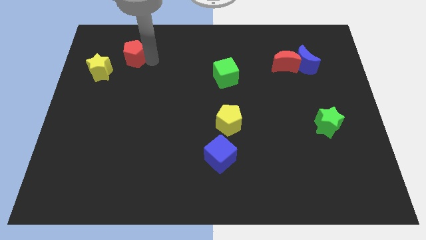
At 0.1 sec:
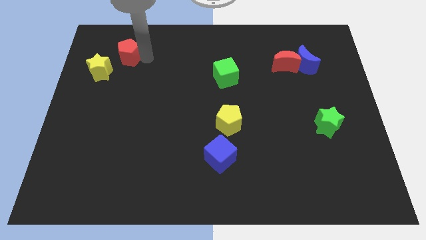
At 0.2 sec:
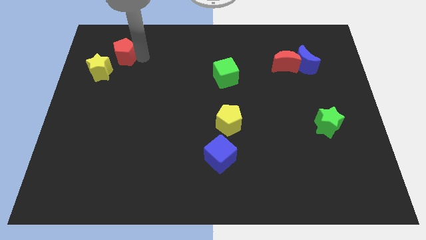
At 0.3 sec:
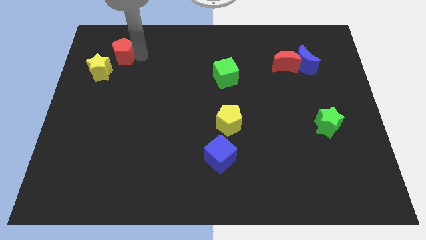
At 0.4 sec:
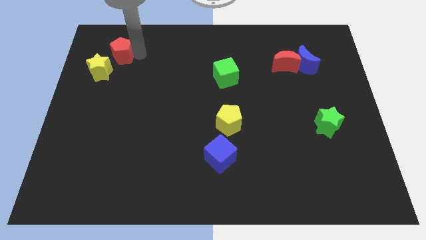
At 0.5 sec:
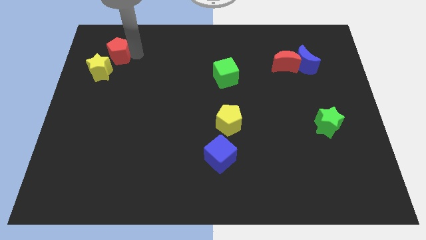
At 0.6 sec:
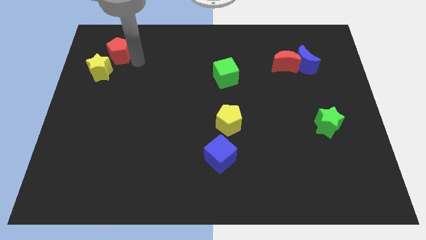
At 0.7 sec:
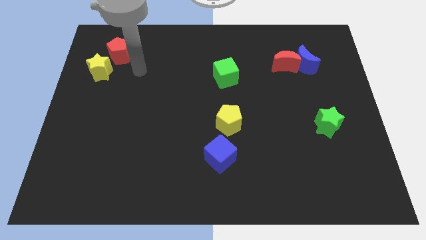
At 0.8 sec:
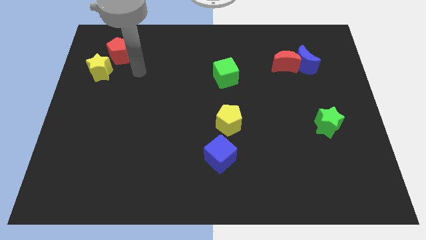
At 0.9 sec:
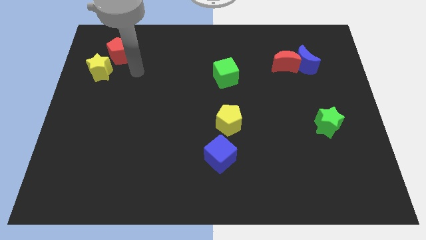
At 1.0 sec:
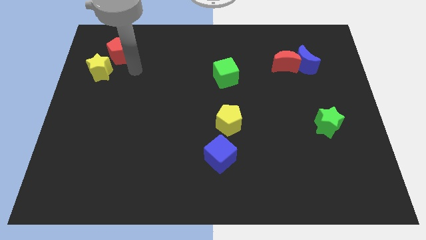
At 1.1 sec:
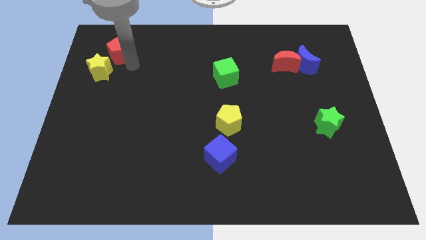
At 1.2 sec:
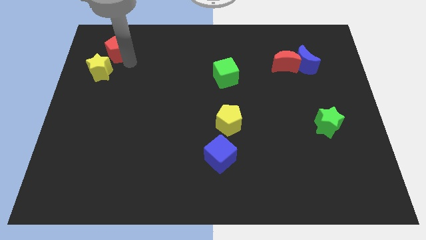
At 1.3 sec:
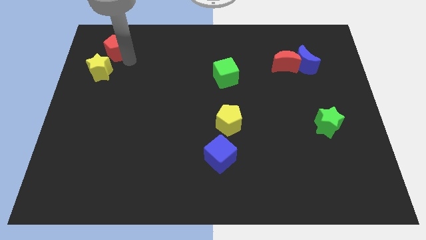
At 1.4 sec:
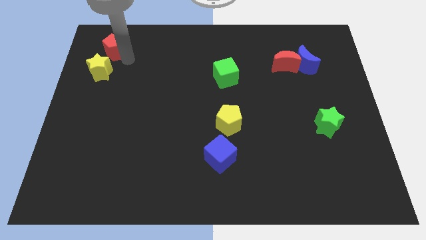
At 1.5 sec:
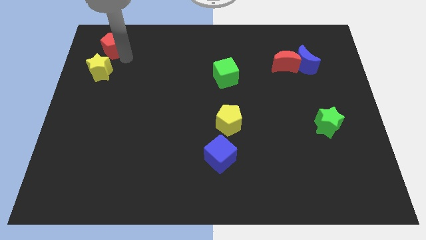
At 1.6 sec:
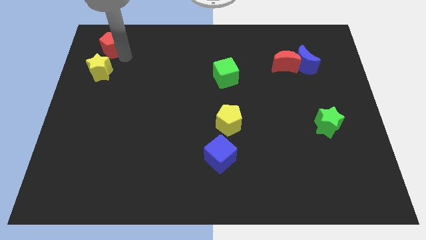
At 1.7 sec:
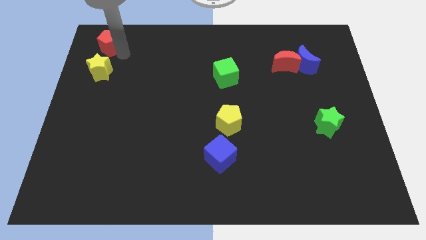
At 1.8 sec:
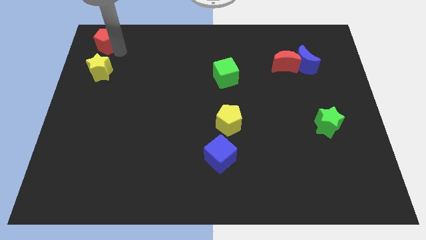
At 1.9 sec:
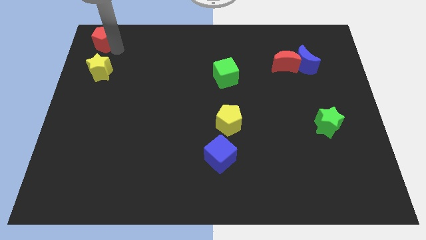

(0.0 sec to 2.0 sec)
put the red pentagon above the yellow star

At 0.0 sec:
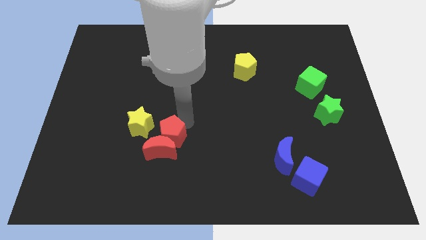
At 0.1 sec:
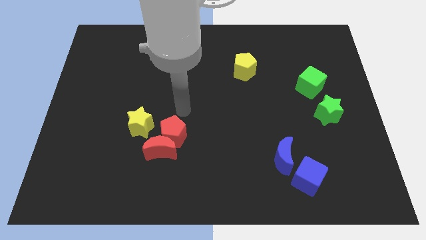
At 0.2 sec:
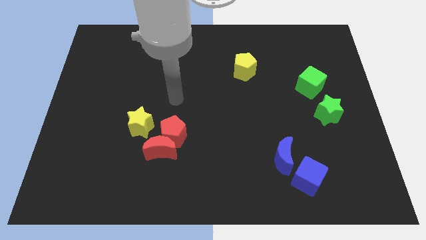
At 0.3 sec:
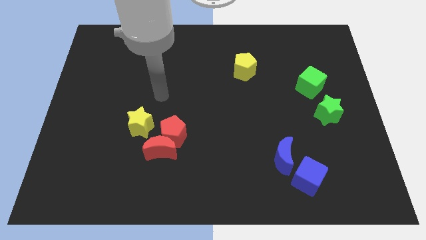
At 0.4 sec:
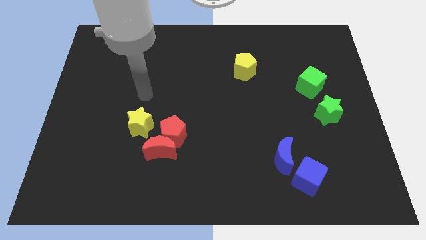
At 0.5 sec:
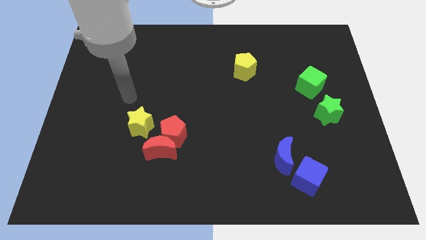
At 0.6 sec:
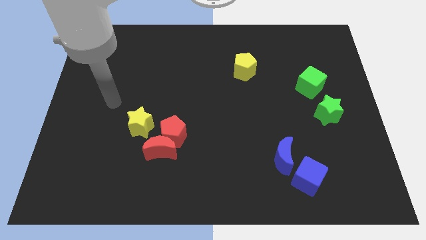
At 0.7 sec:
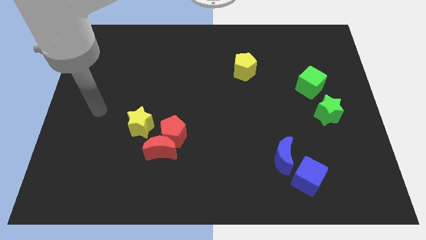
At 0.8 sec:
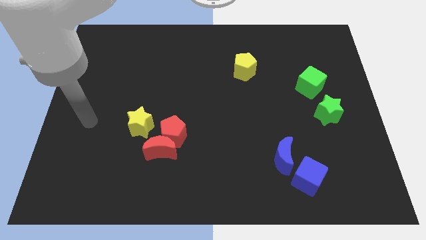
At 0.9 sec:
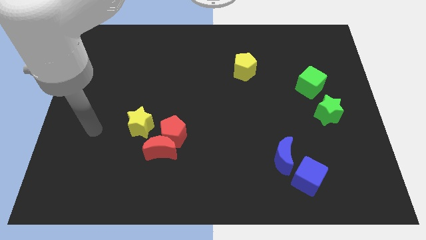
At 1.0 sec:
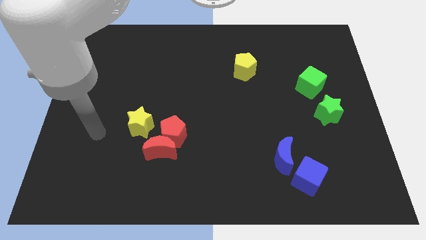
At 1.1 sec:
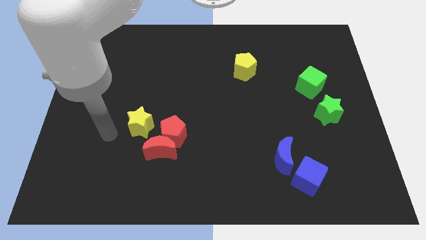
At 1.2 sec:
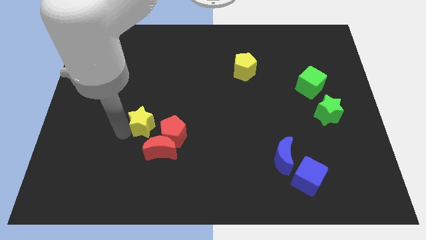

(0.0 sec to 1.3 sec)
place the arm to the left of the yellow star

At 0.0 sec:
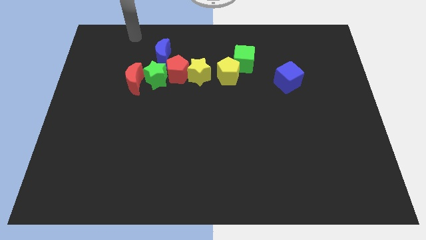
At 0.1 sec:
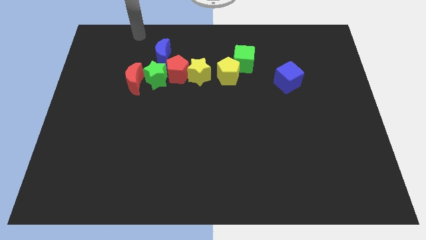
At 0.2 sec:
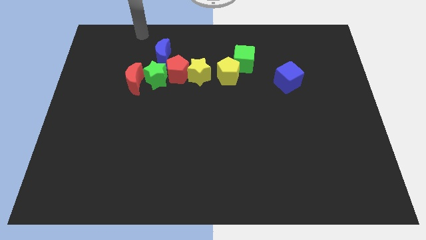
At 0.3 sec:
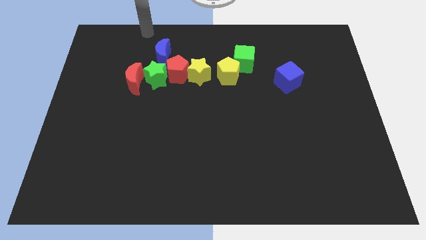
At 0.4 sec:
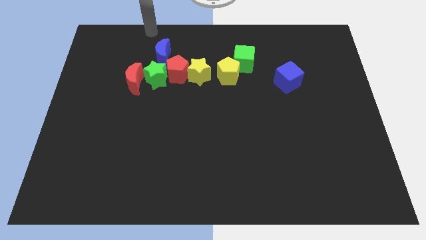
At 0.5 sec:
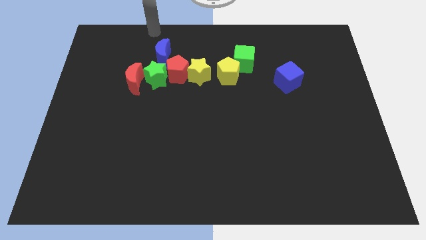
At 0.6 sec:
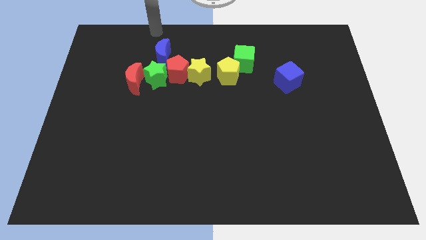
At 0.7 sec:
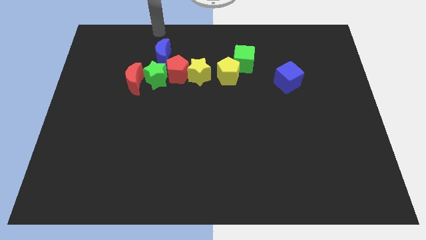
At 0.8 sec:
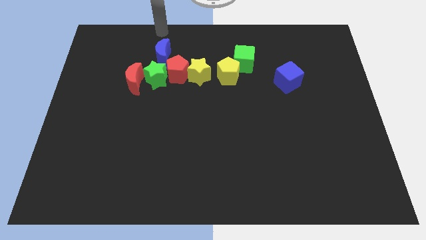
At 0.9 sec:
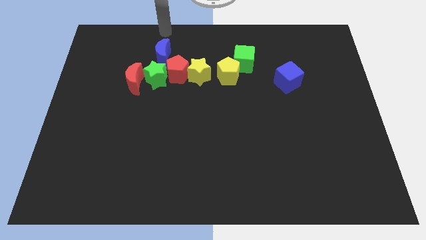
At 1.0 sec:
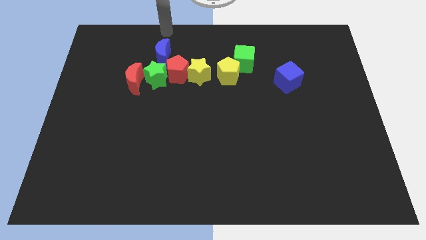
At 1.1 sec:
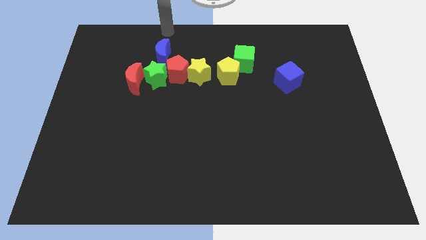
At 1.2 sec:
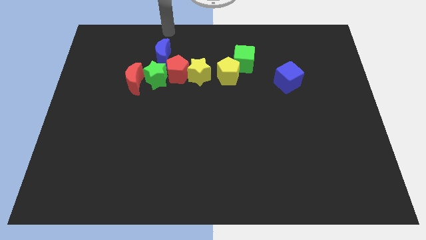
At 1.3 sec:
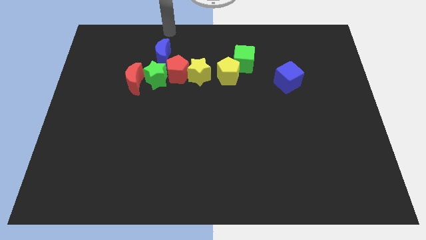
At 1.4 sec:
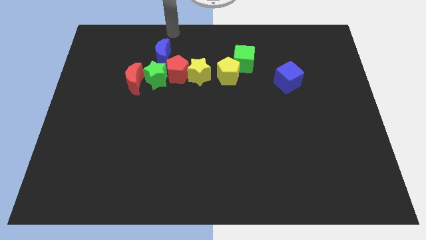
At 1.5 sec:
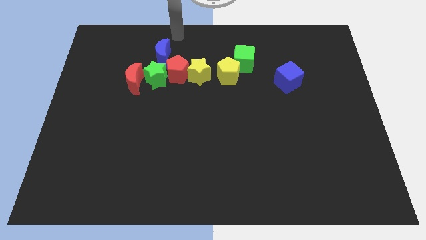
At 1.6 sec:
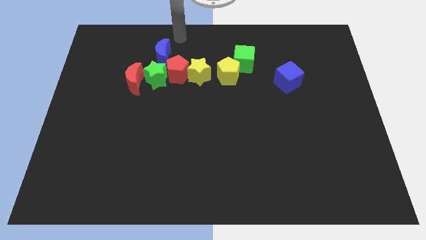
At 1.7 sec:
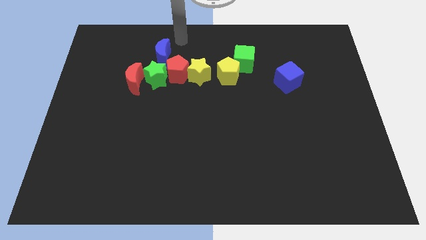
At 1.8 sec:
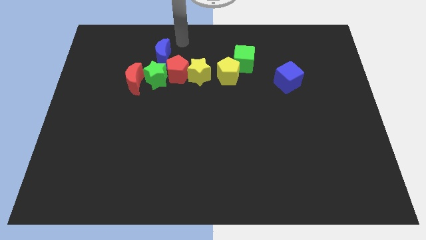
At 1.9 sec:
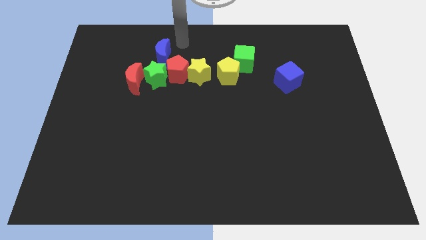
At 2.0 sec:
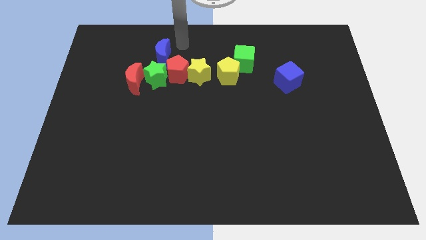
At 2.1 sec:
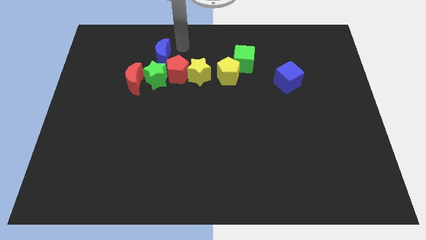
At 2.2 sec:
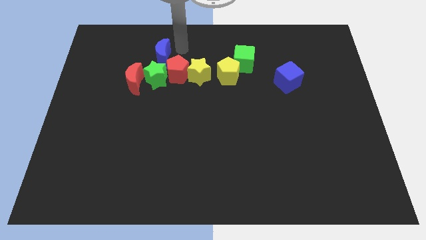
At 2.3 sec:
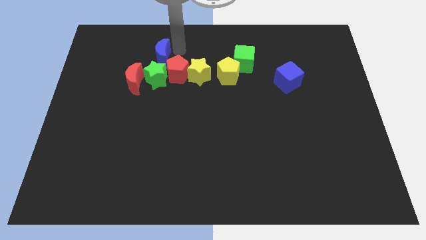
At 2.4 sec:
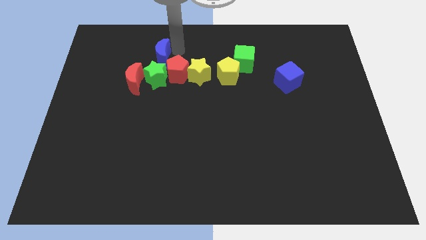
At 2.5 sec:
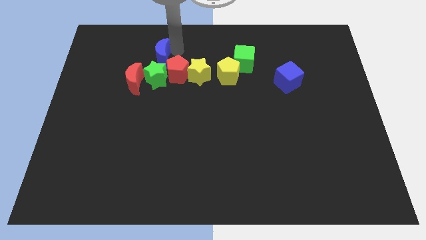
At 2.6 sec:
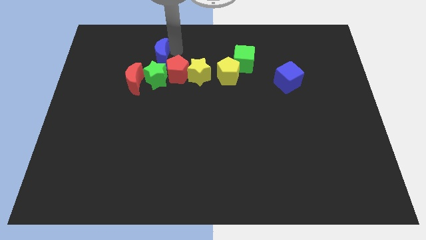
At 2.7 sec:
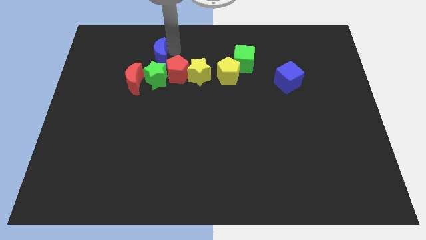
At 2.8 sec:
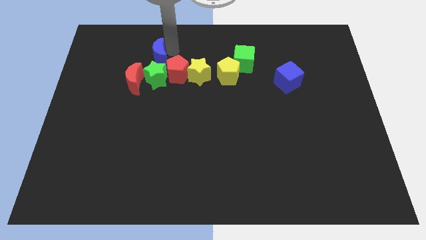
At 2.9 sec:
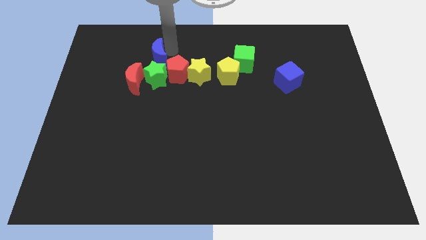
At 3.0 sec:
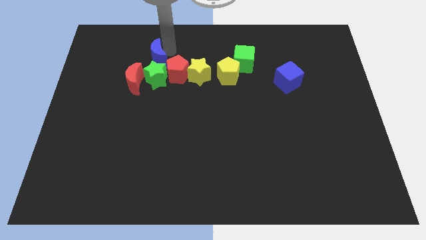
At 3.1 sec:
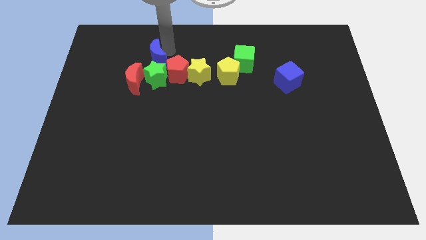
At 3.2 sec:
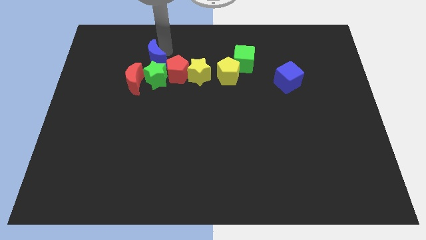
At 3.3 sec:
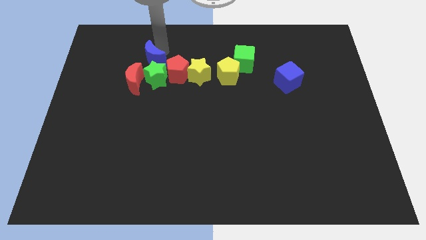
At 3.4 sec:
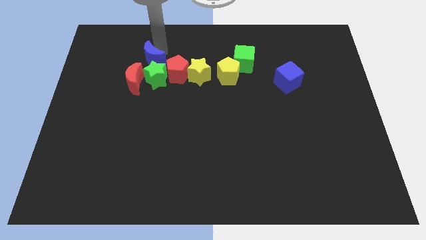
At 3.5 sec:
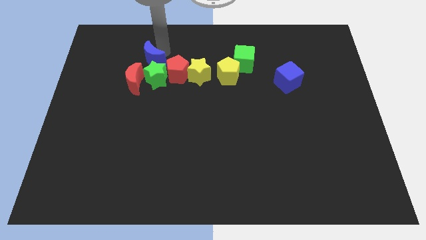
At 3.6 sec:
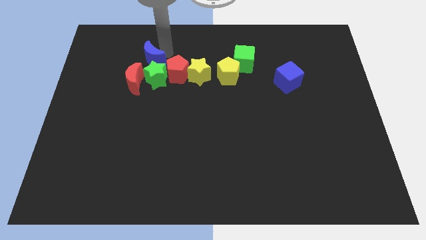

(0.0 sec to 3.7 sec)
drag the blue moon to the top side of the green star

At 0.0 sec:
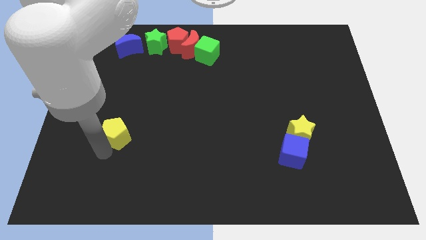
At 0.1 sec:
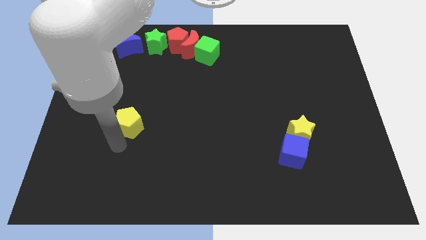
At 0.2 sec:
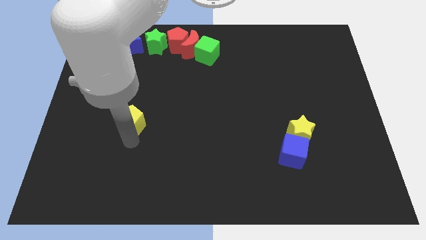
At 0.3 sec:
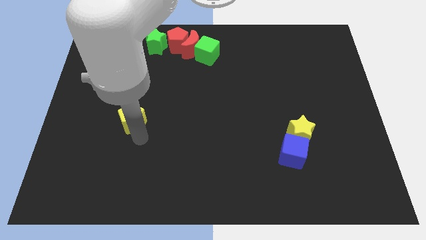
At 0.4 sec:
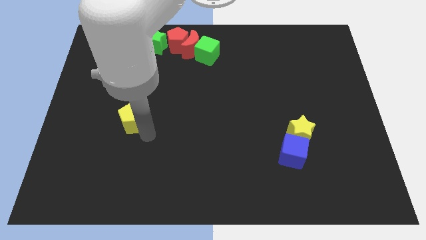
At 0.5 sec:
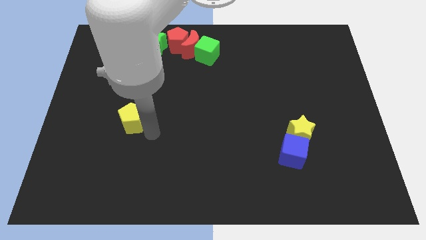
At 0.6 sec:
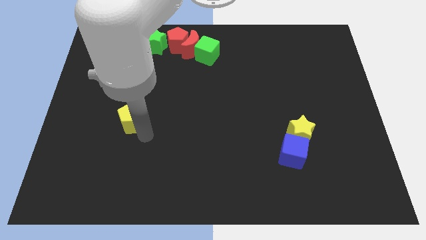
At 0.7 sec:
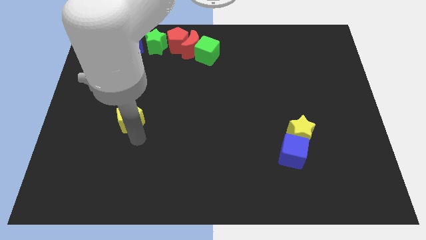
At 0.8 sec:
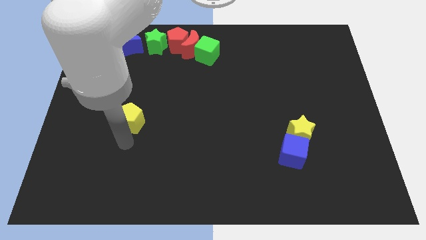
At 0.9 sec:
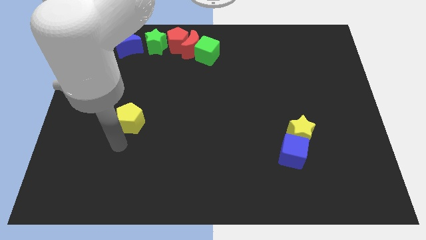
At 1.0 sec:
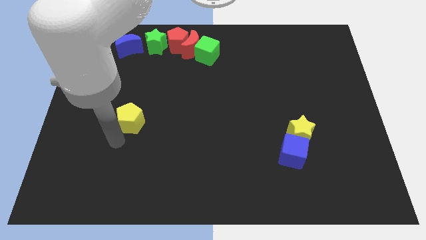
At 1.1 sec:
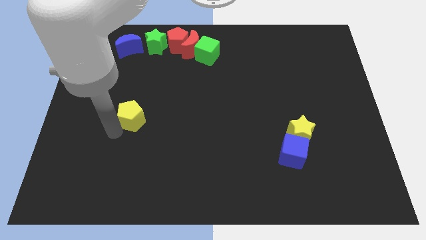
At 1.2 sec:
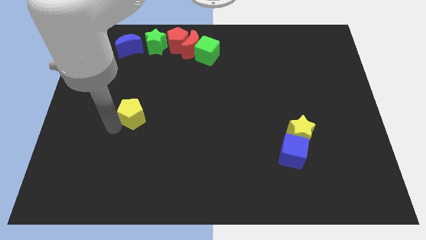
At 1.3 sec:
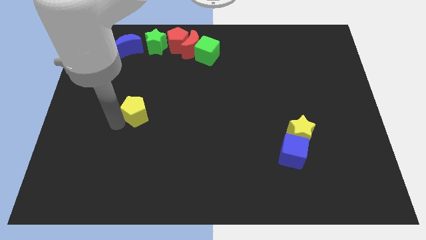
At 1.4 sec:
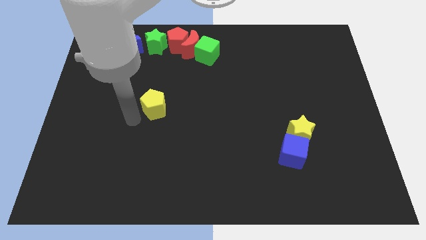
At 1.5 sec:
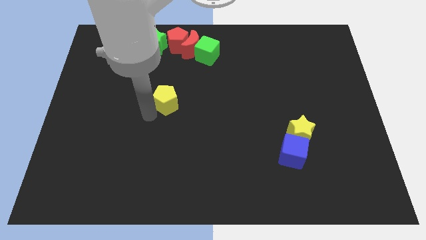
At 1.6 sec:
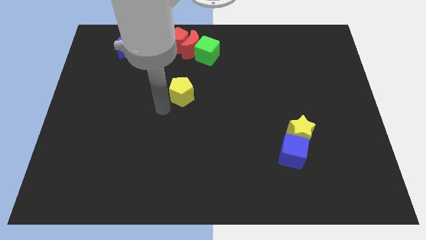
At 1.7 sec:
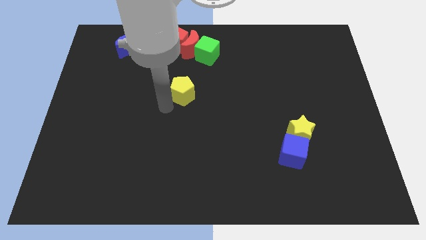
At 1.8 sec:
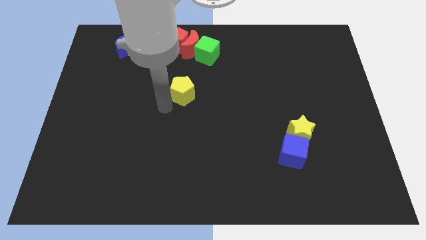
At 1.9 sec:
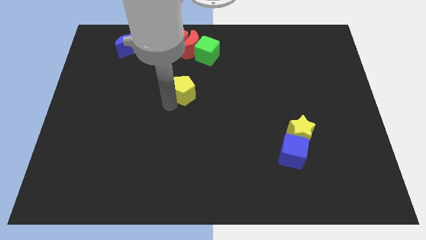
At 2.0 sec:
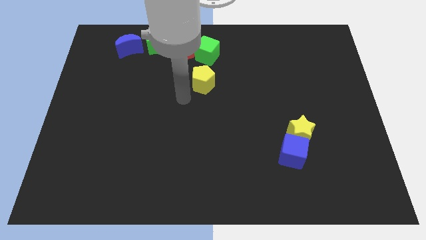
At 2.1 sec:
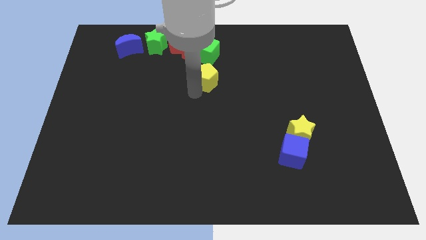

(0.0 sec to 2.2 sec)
drag the yellow pentagon slightly upwards
